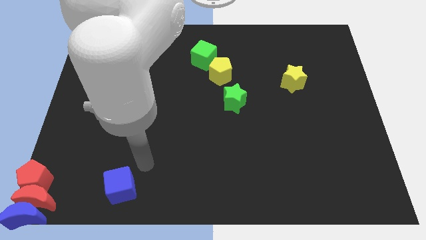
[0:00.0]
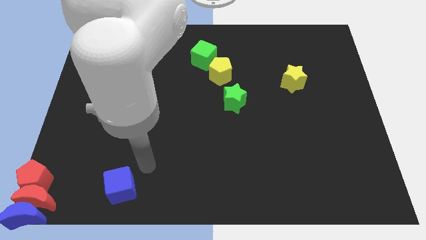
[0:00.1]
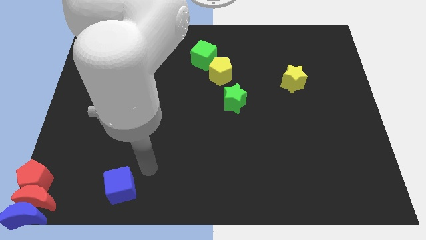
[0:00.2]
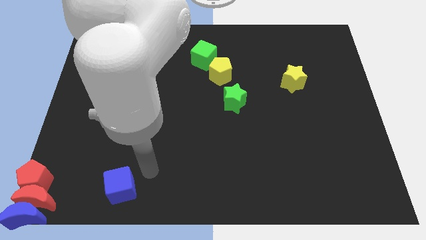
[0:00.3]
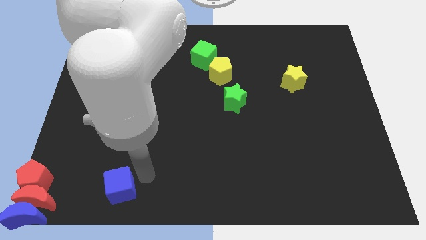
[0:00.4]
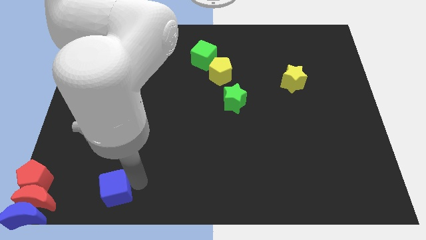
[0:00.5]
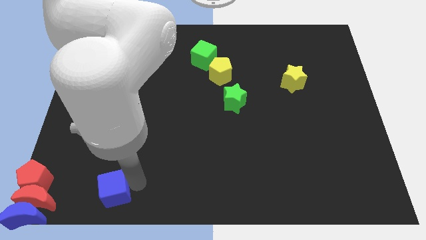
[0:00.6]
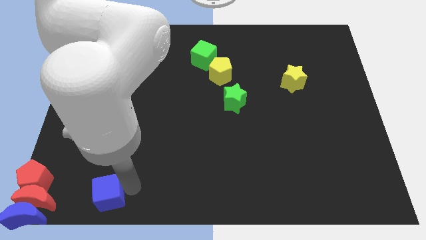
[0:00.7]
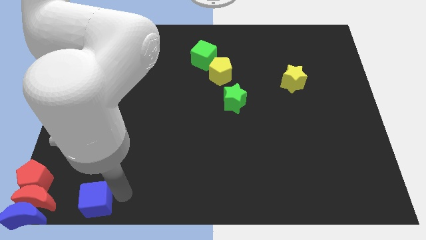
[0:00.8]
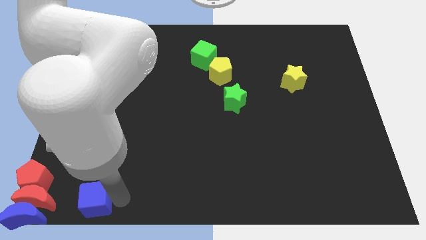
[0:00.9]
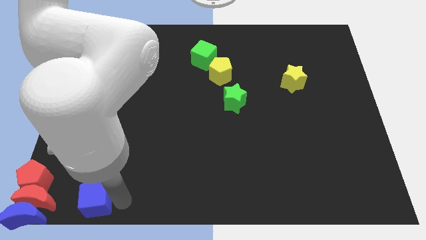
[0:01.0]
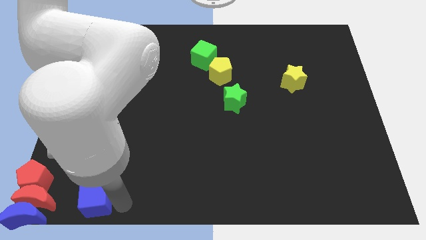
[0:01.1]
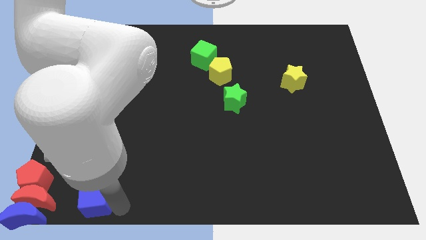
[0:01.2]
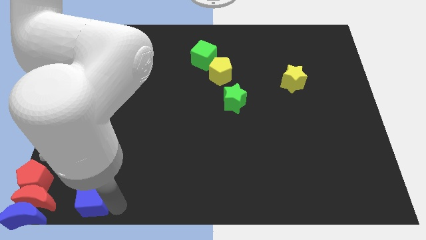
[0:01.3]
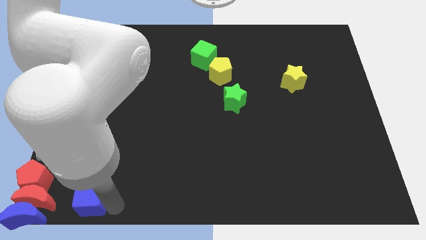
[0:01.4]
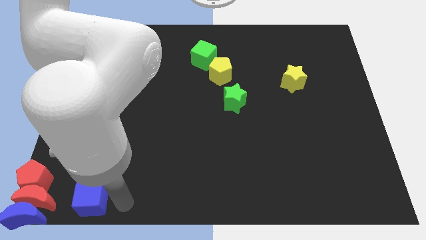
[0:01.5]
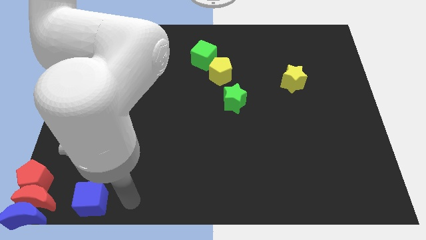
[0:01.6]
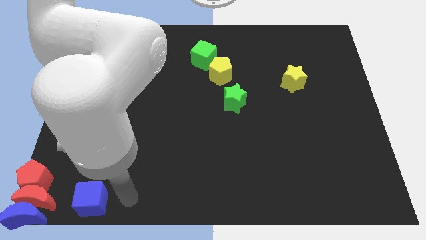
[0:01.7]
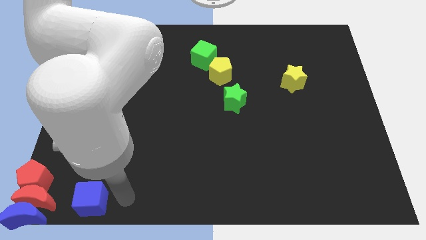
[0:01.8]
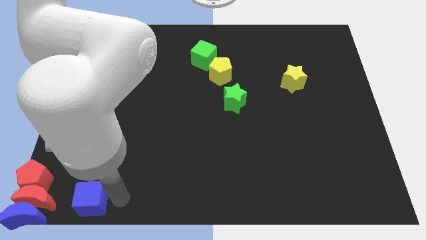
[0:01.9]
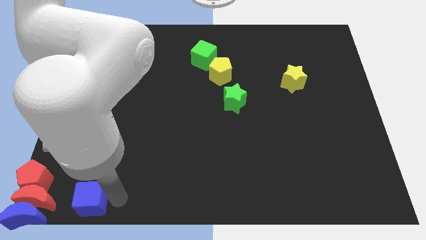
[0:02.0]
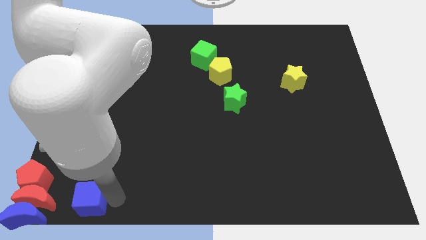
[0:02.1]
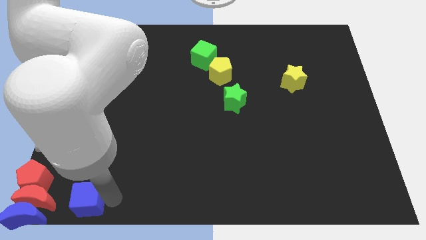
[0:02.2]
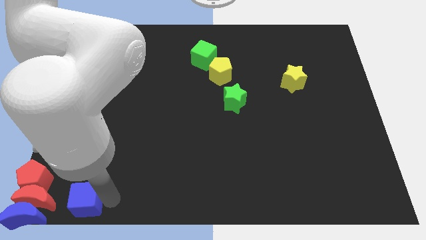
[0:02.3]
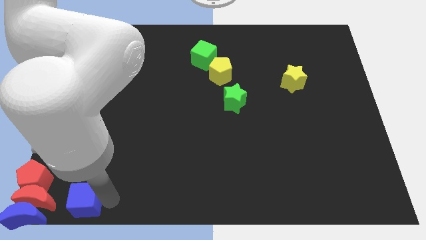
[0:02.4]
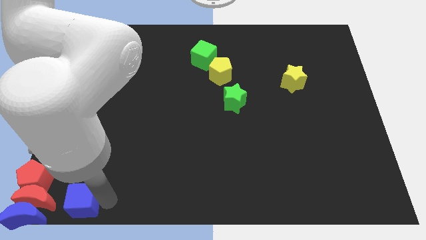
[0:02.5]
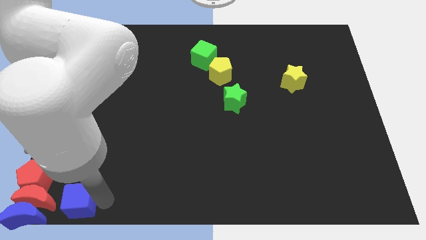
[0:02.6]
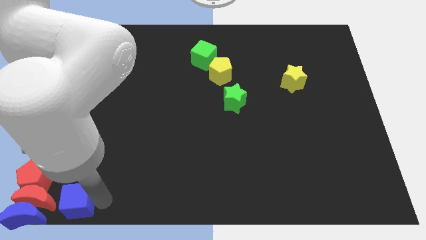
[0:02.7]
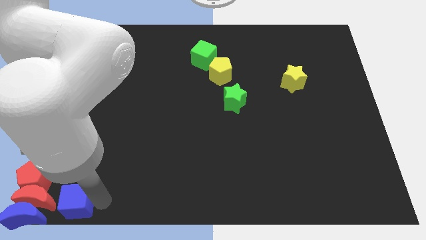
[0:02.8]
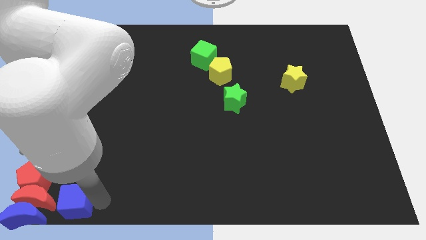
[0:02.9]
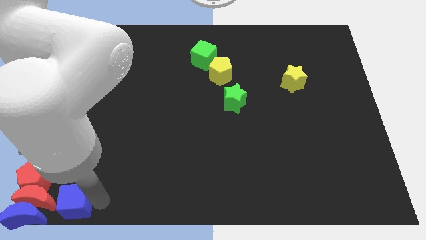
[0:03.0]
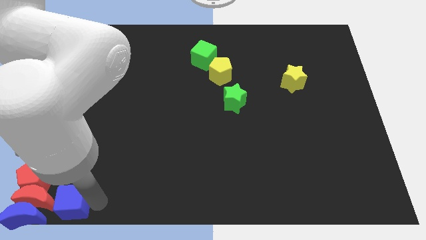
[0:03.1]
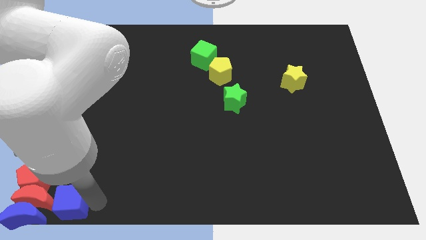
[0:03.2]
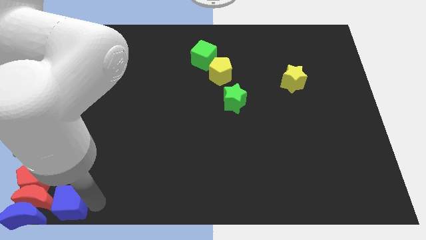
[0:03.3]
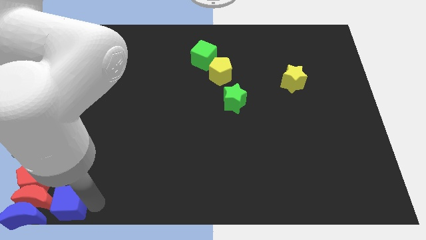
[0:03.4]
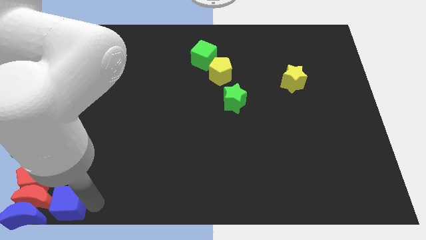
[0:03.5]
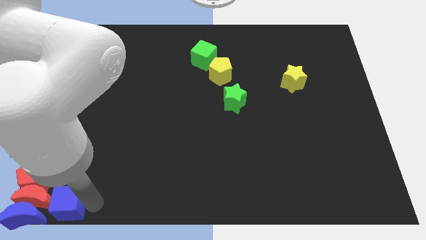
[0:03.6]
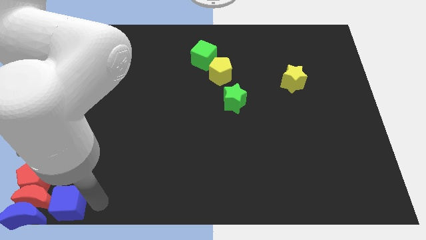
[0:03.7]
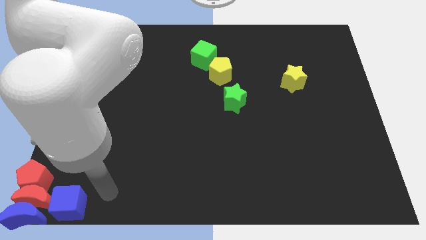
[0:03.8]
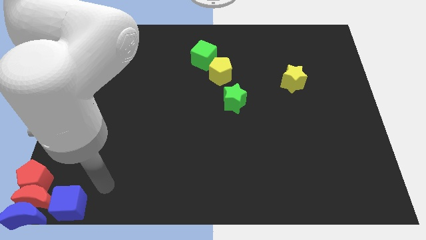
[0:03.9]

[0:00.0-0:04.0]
place the blue cube right to the red moon

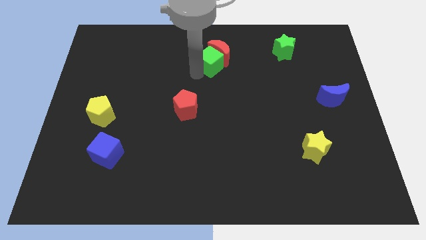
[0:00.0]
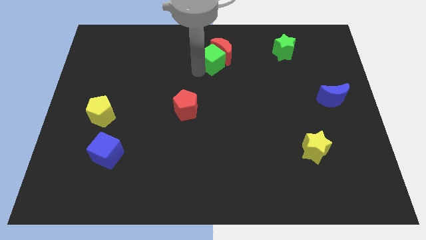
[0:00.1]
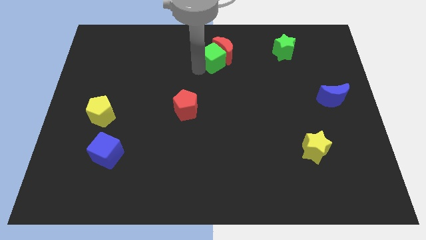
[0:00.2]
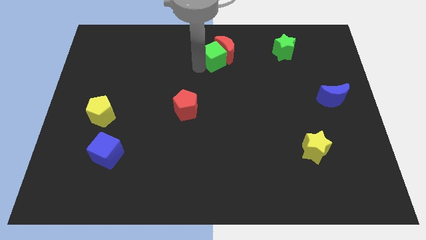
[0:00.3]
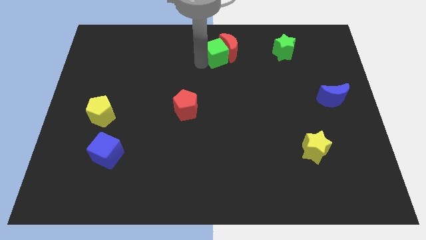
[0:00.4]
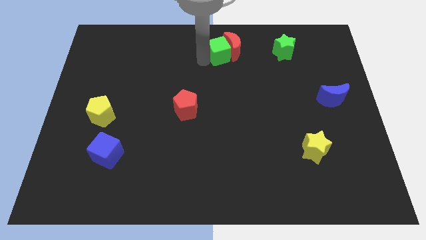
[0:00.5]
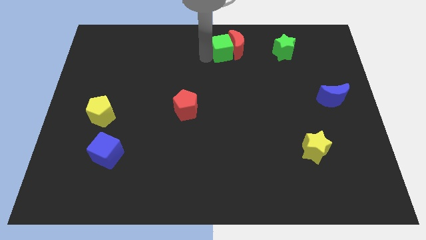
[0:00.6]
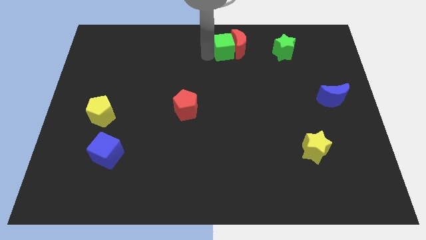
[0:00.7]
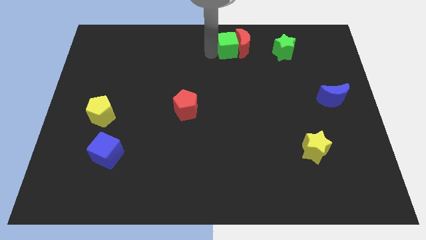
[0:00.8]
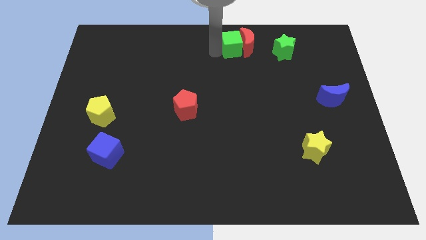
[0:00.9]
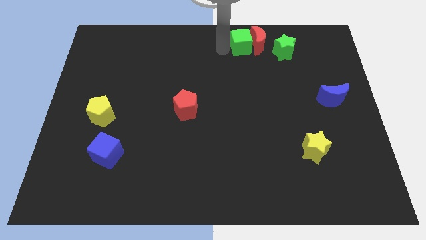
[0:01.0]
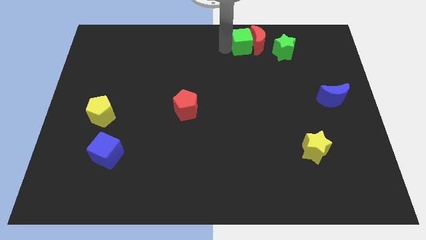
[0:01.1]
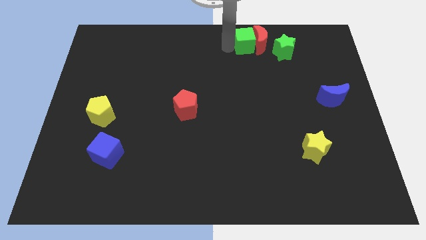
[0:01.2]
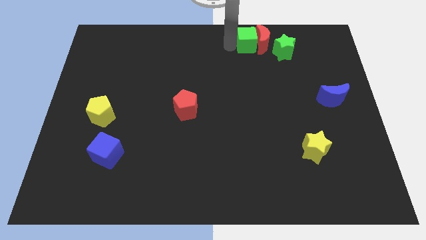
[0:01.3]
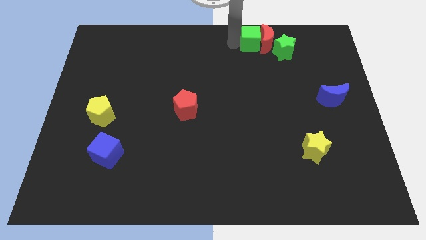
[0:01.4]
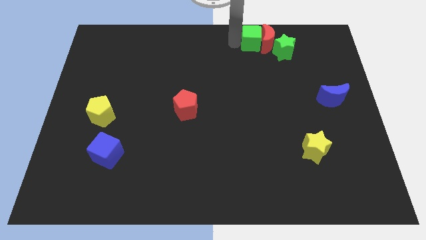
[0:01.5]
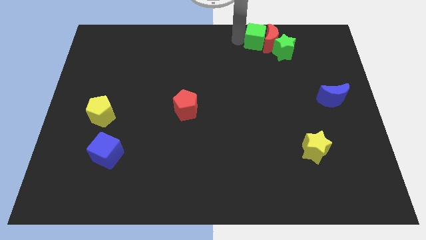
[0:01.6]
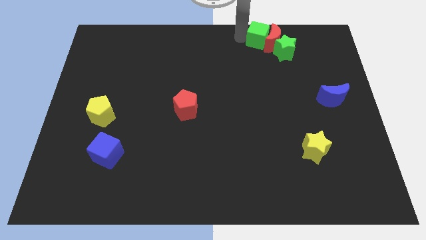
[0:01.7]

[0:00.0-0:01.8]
push the green cube along with the red moon towards the left

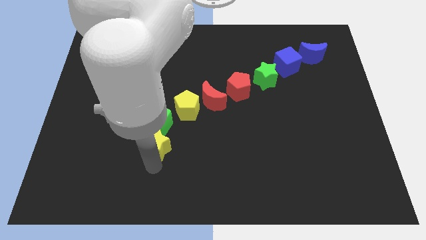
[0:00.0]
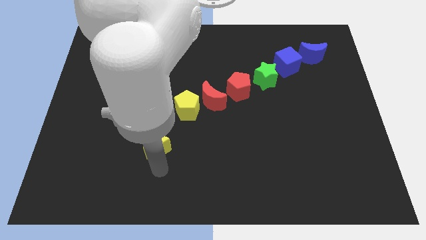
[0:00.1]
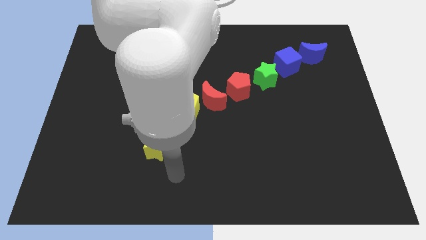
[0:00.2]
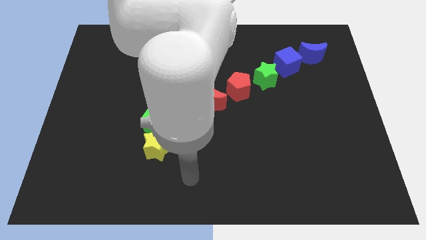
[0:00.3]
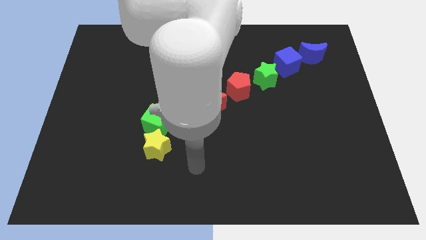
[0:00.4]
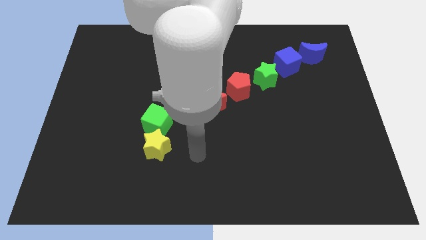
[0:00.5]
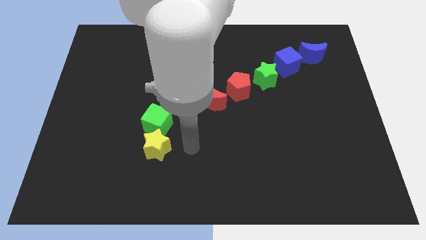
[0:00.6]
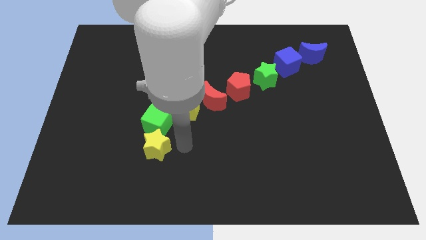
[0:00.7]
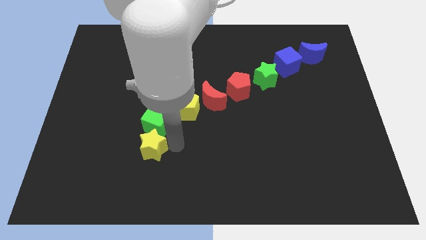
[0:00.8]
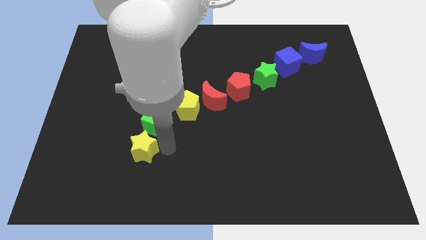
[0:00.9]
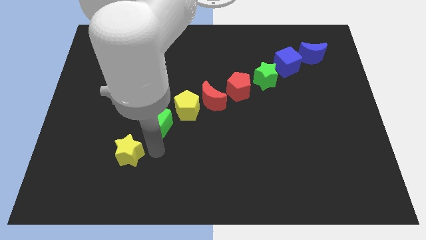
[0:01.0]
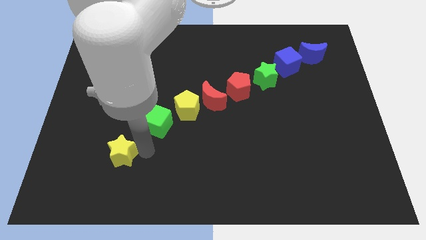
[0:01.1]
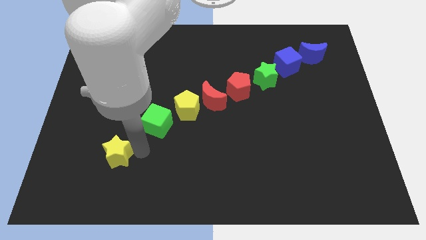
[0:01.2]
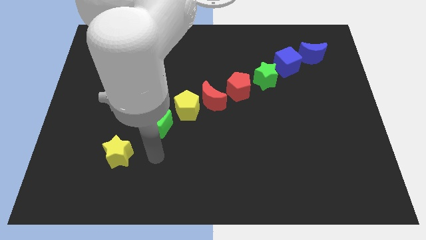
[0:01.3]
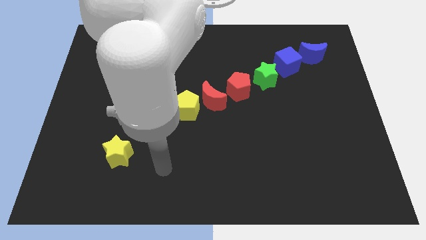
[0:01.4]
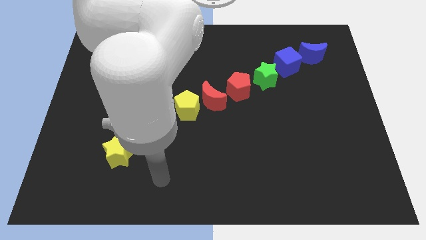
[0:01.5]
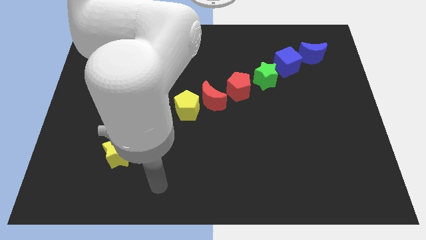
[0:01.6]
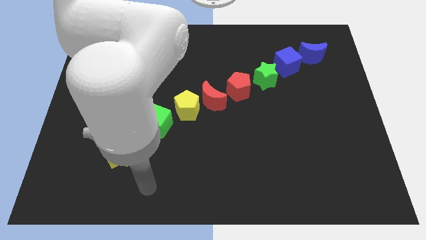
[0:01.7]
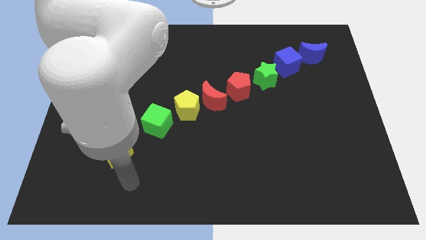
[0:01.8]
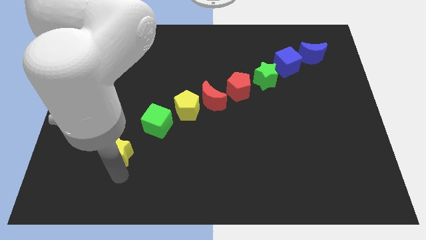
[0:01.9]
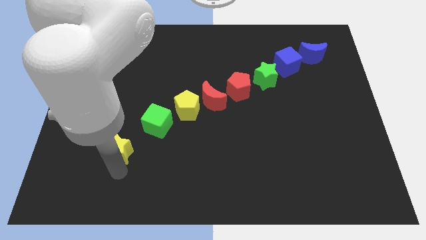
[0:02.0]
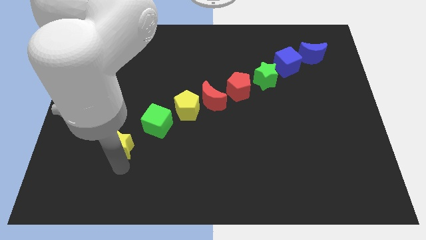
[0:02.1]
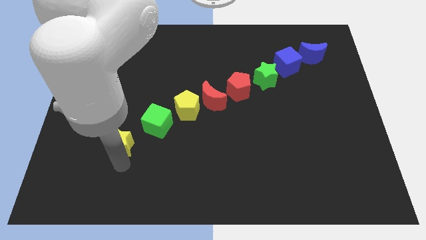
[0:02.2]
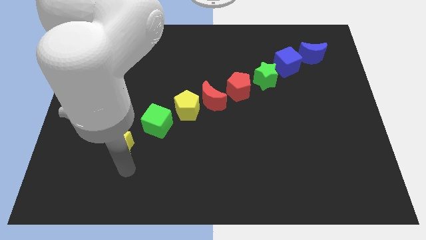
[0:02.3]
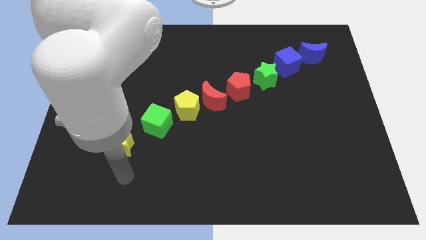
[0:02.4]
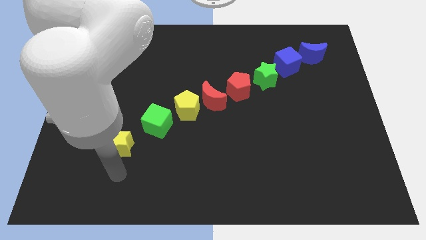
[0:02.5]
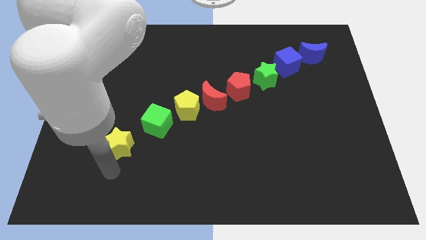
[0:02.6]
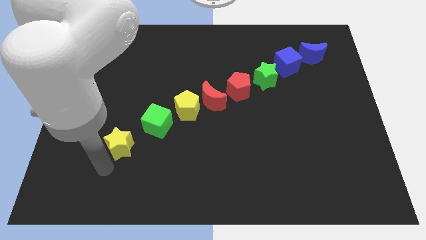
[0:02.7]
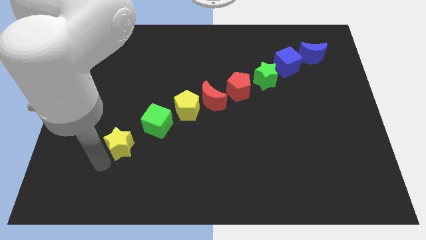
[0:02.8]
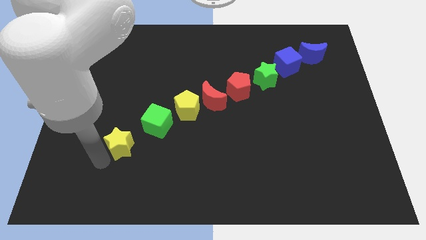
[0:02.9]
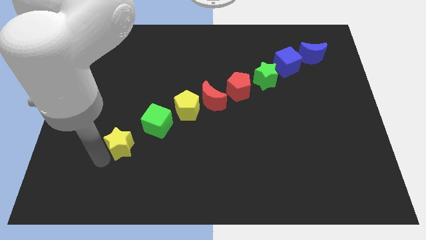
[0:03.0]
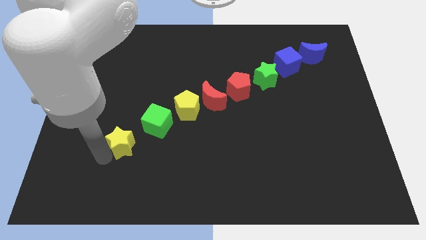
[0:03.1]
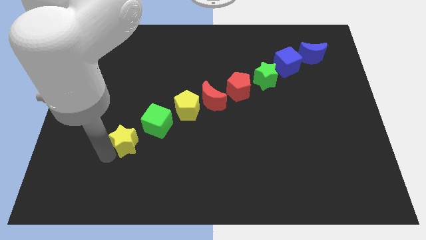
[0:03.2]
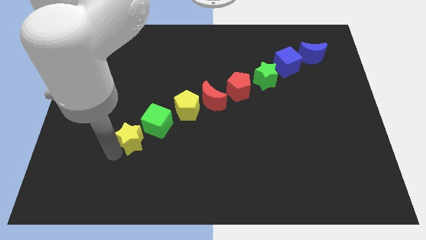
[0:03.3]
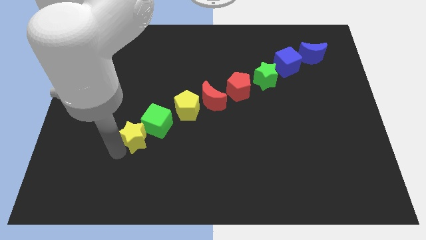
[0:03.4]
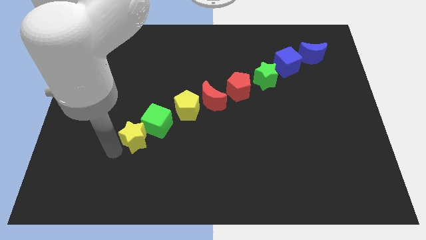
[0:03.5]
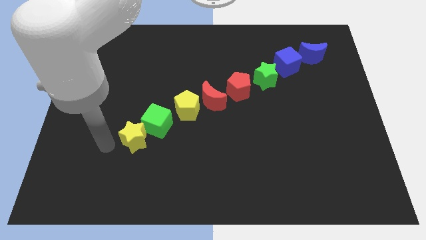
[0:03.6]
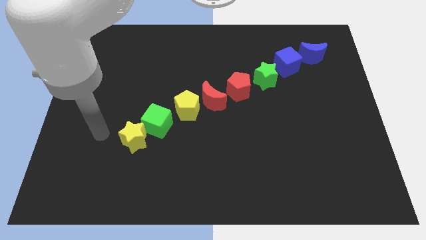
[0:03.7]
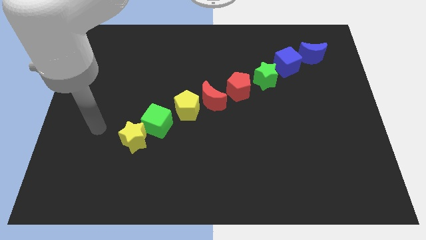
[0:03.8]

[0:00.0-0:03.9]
move the yellow star diagonally bottom left to the green cube
